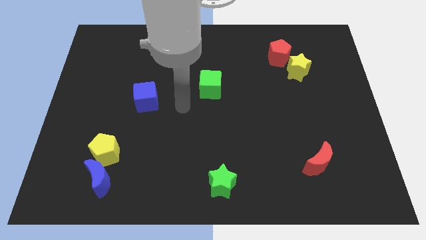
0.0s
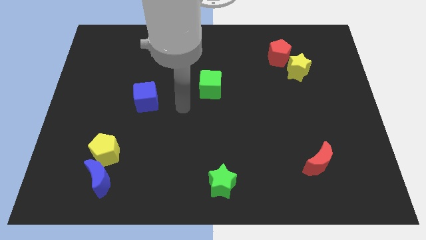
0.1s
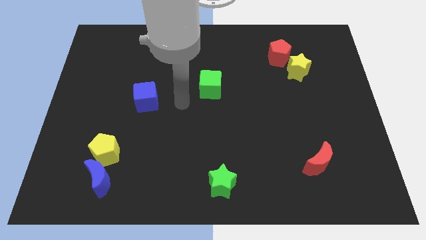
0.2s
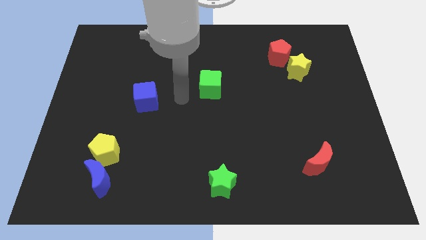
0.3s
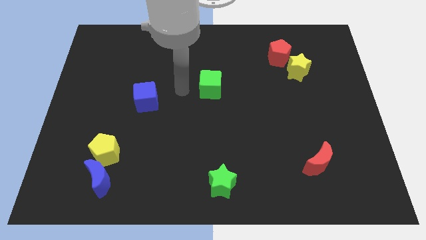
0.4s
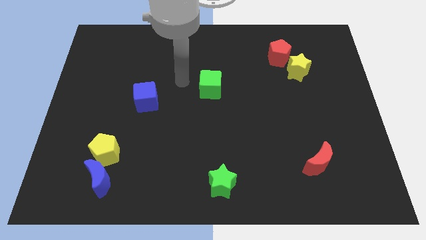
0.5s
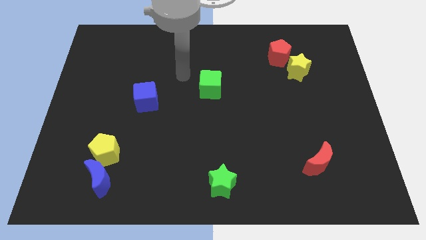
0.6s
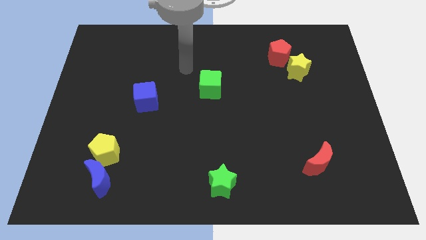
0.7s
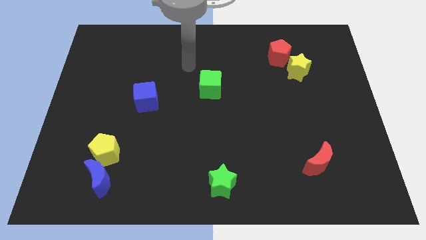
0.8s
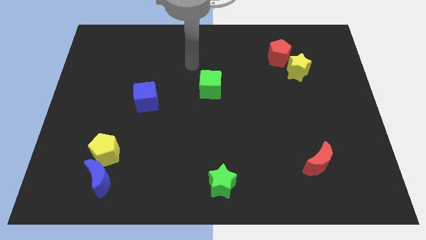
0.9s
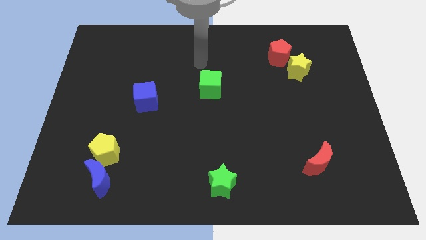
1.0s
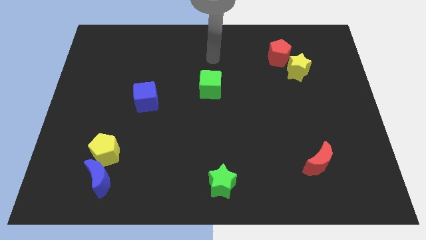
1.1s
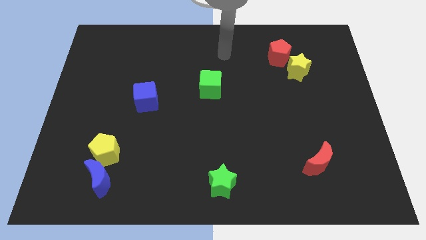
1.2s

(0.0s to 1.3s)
place your arm at the top of green cube

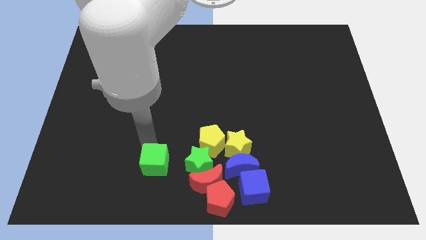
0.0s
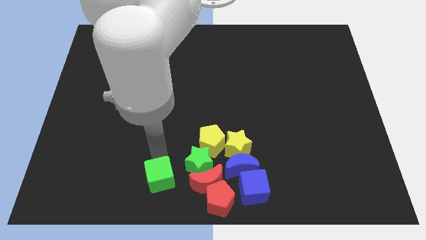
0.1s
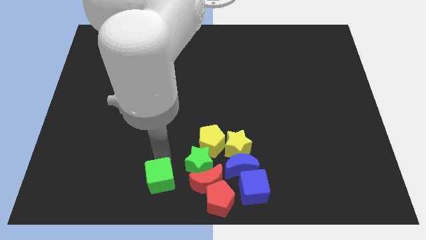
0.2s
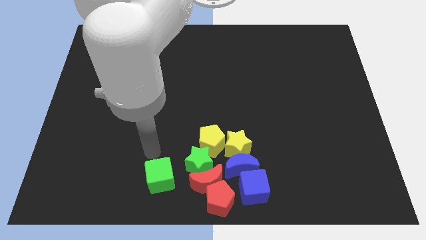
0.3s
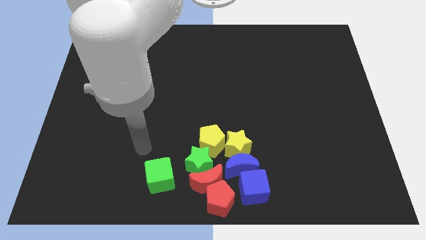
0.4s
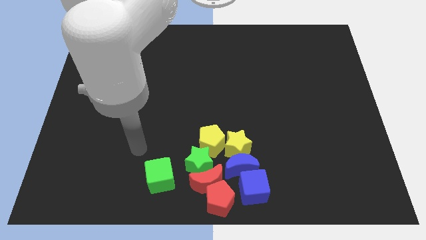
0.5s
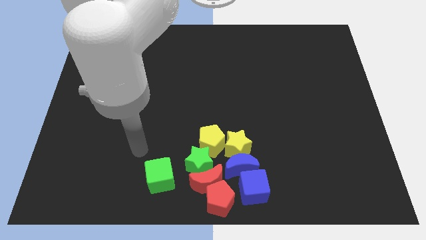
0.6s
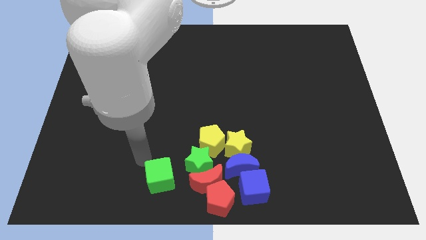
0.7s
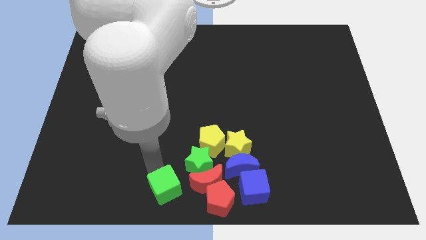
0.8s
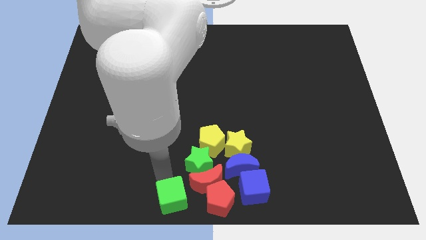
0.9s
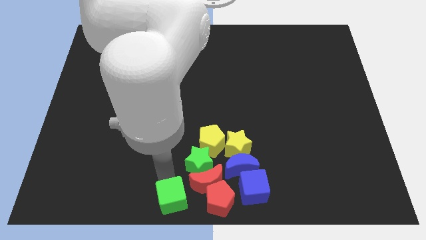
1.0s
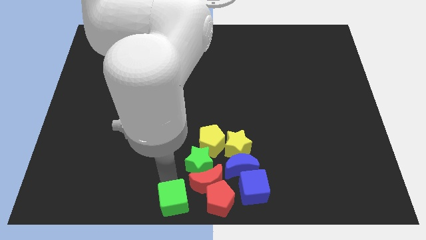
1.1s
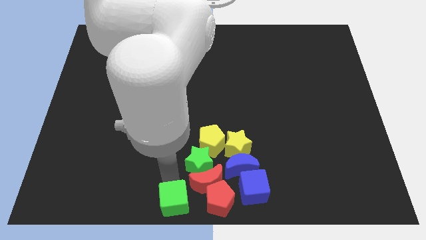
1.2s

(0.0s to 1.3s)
place the green cube left to the red pentagon

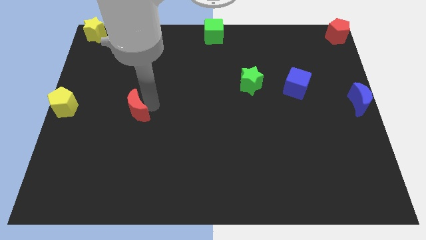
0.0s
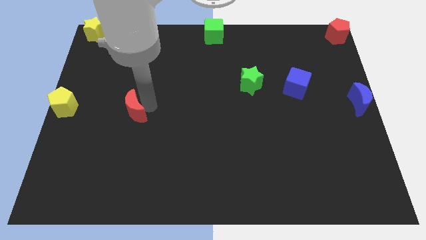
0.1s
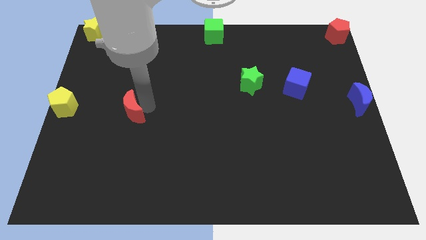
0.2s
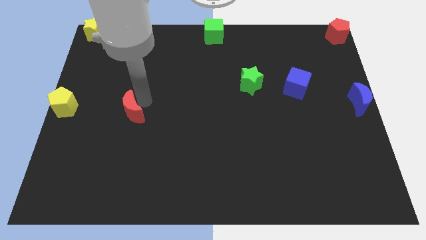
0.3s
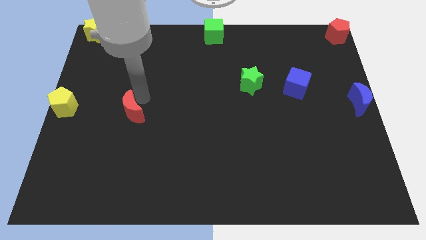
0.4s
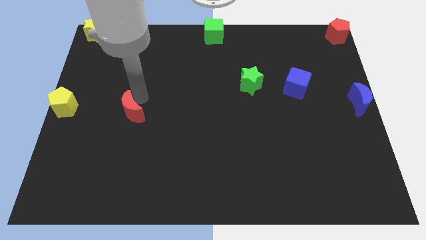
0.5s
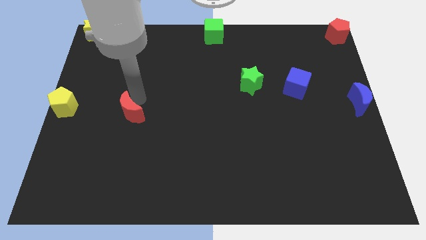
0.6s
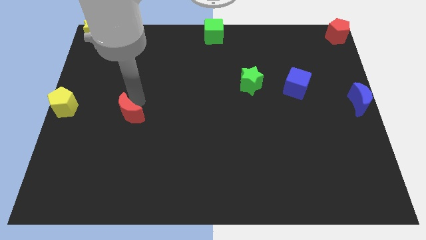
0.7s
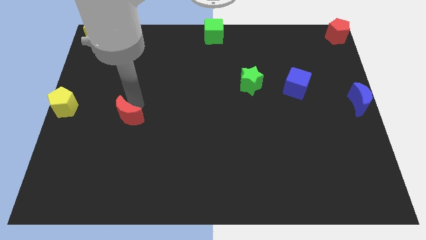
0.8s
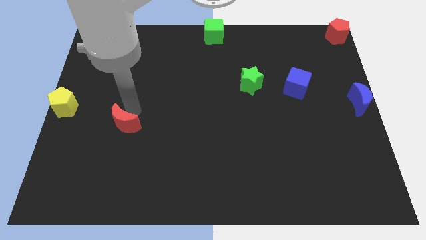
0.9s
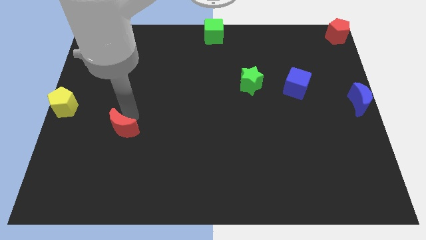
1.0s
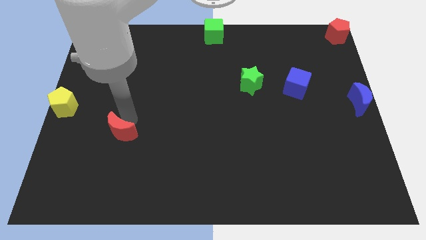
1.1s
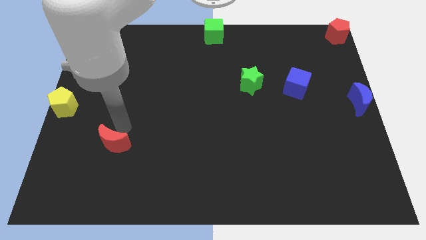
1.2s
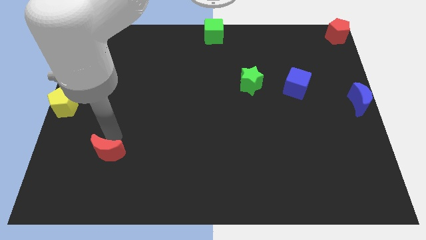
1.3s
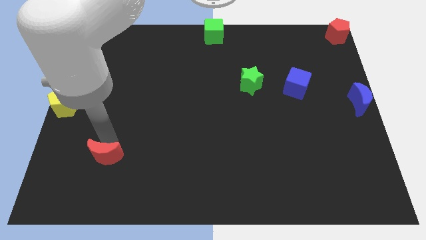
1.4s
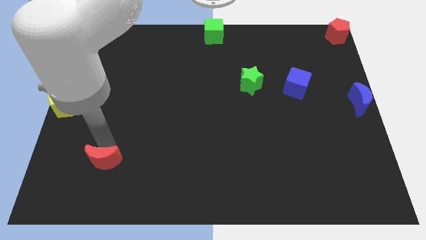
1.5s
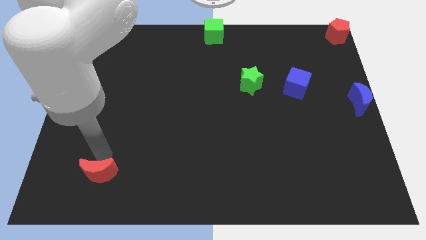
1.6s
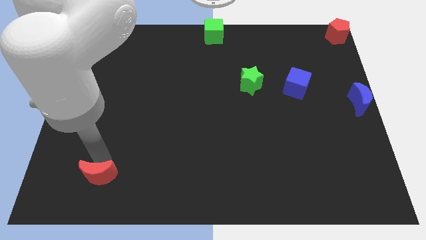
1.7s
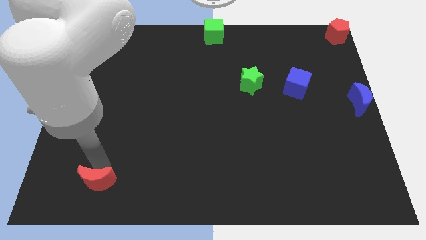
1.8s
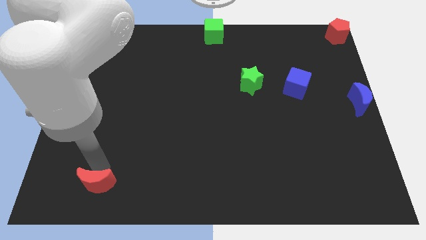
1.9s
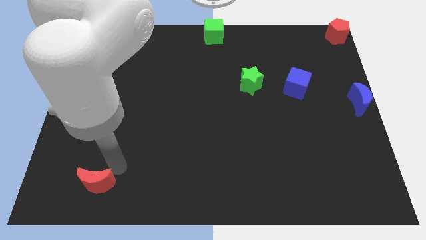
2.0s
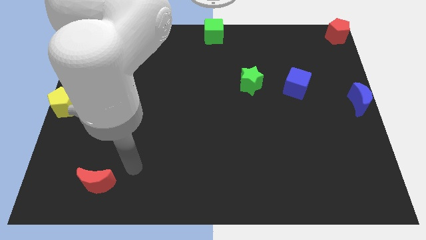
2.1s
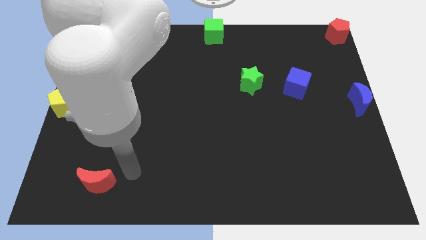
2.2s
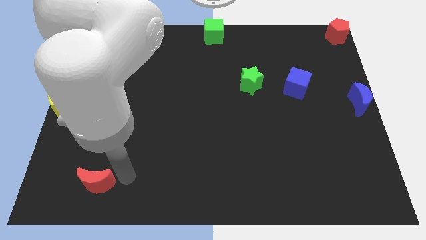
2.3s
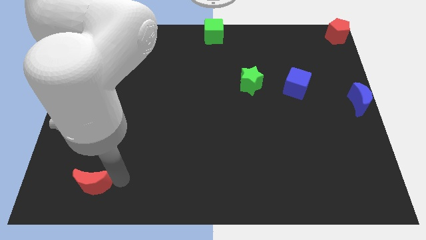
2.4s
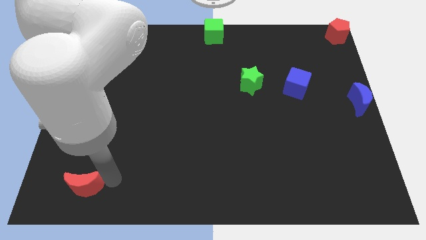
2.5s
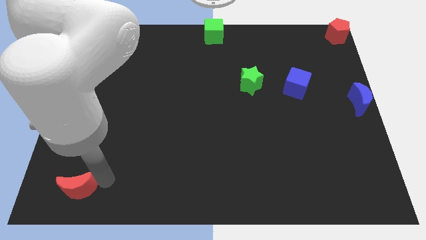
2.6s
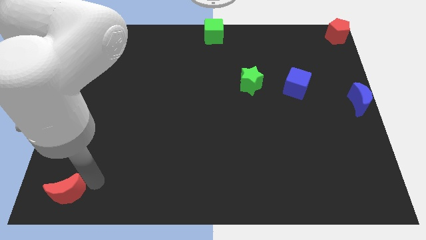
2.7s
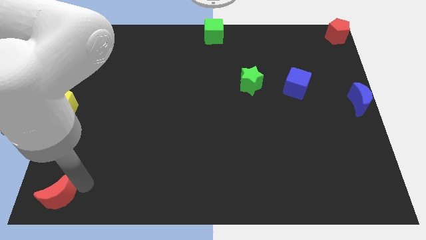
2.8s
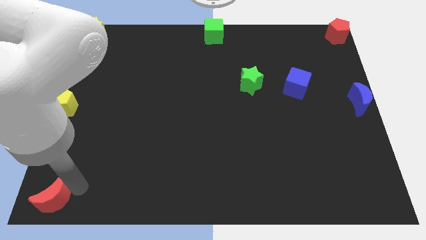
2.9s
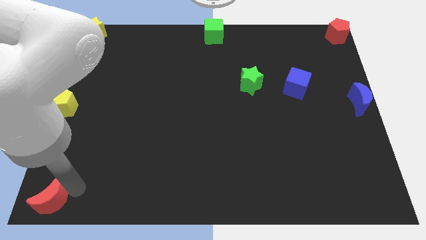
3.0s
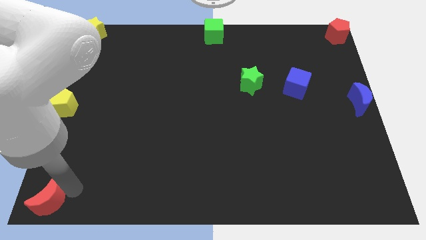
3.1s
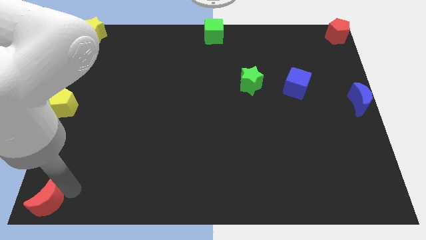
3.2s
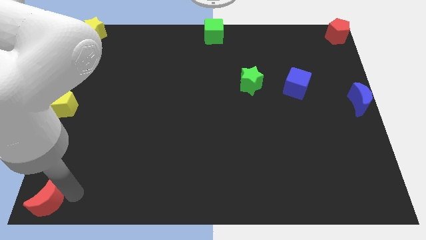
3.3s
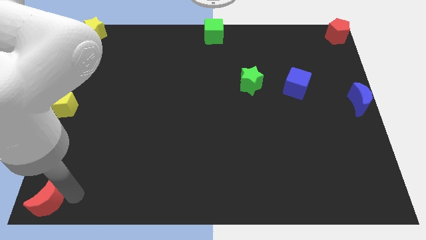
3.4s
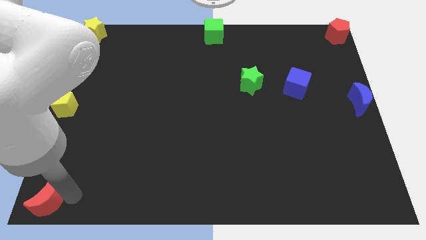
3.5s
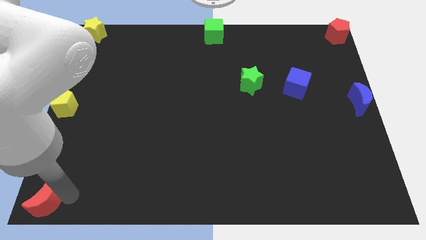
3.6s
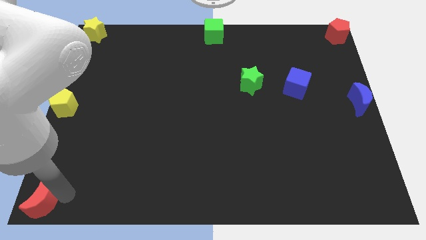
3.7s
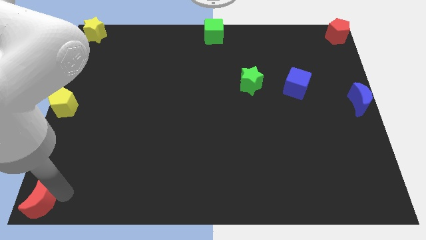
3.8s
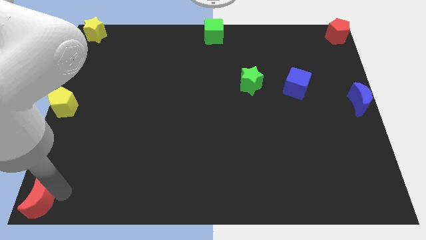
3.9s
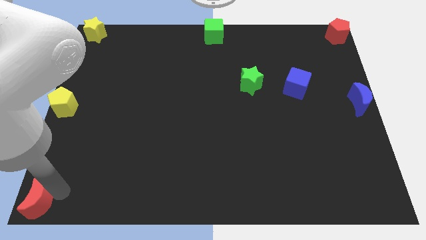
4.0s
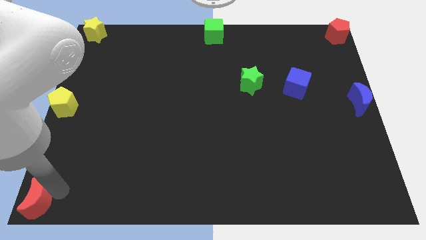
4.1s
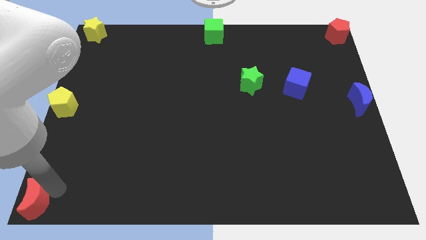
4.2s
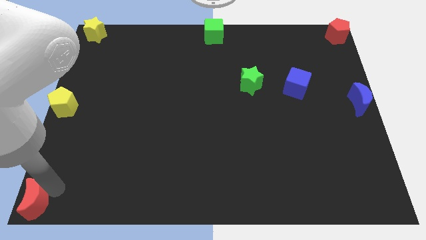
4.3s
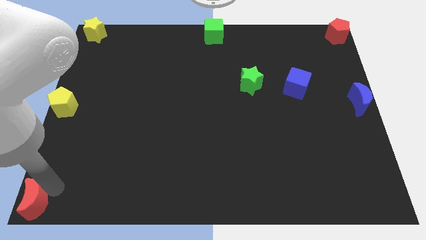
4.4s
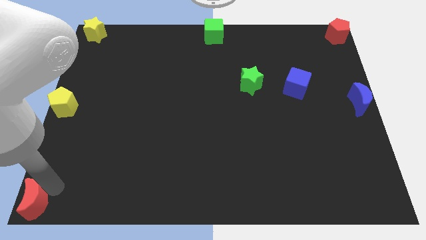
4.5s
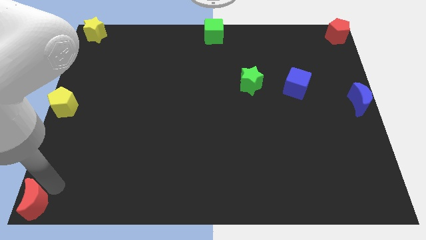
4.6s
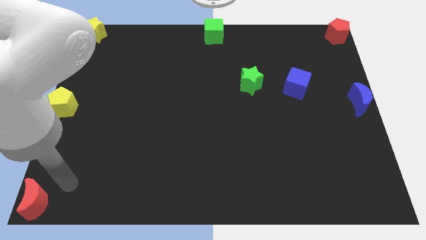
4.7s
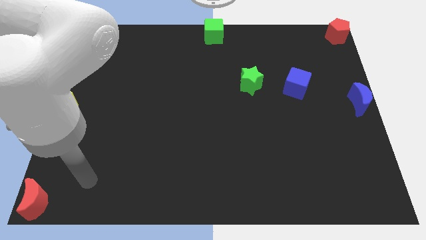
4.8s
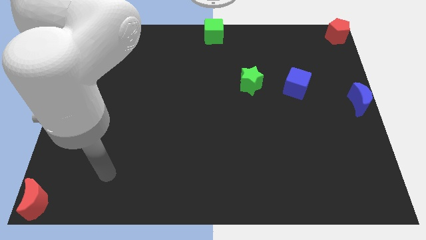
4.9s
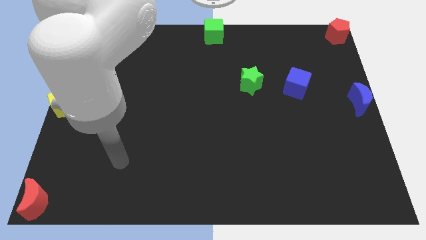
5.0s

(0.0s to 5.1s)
place the red moon to the left bottom of the board

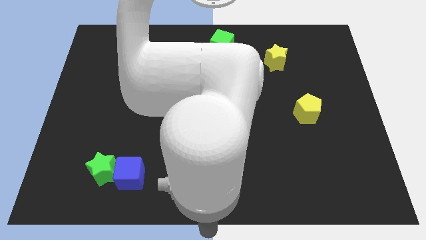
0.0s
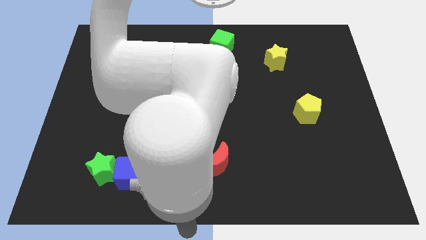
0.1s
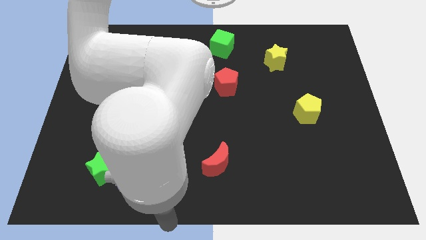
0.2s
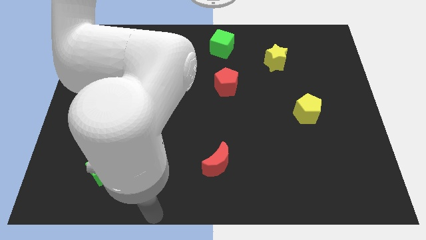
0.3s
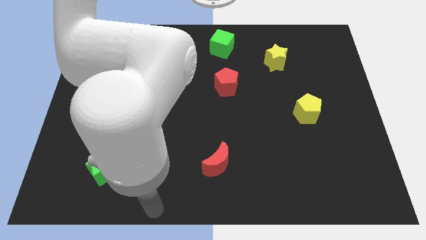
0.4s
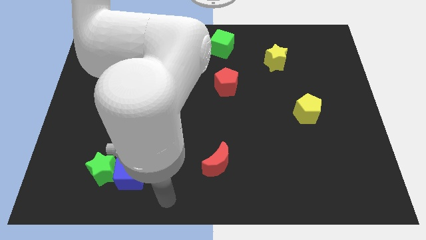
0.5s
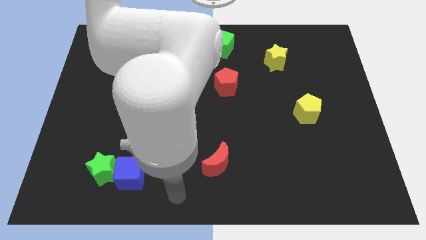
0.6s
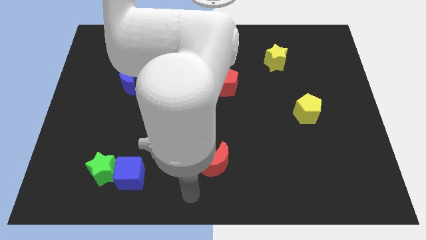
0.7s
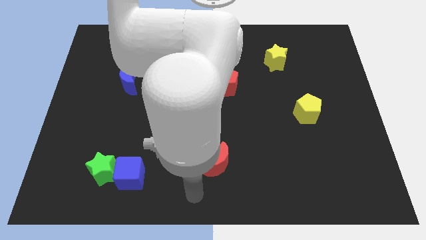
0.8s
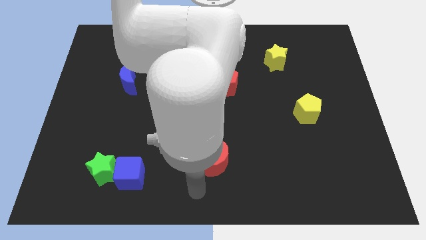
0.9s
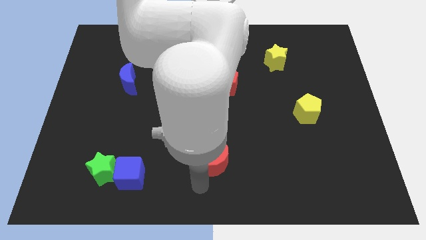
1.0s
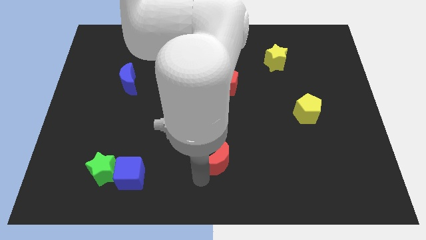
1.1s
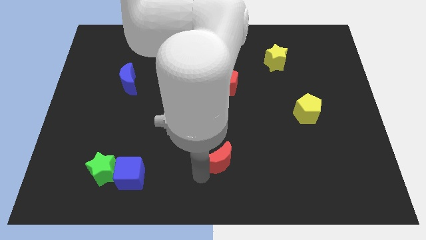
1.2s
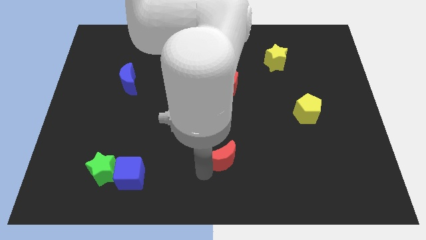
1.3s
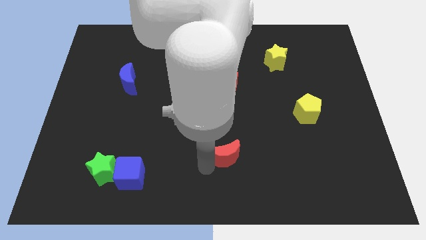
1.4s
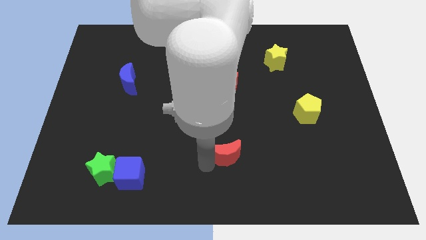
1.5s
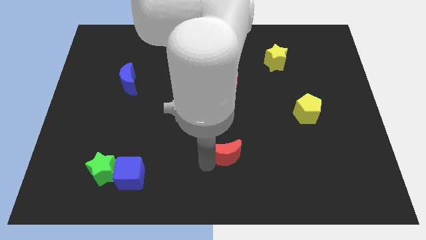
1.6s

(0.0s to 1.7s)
touch the bottom left side of the red crescent
